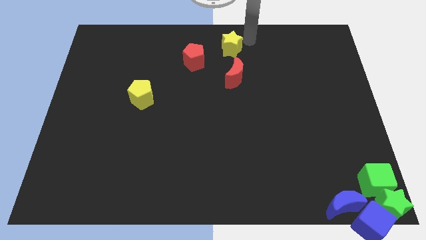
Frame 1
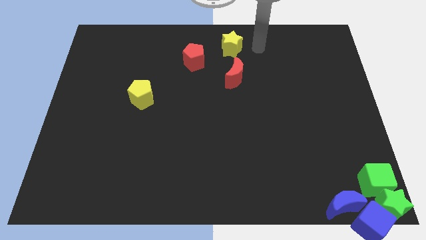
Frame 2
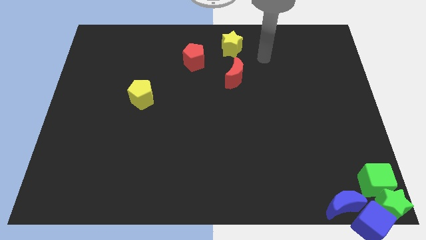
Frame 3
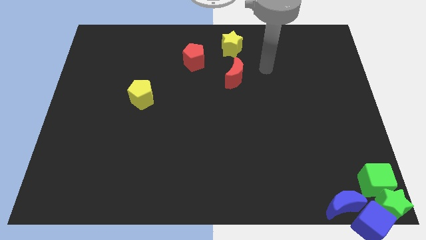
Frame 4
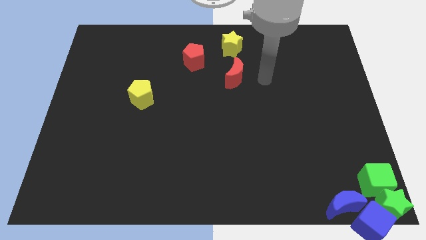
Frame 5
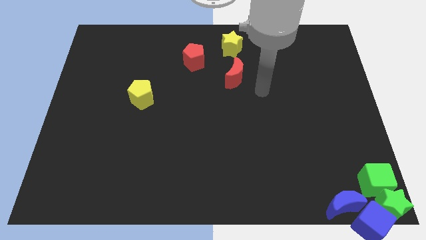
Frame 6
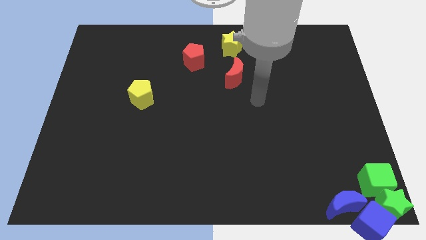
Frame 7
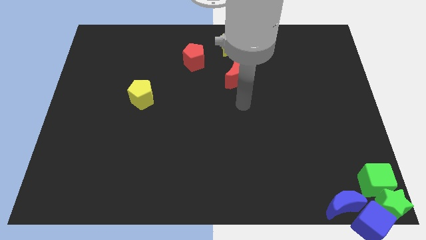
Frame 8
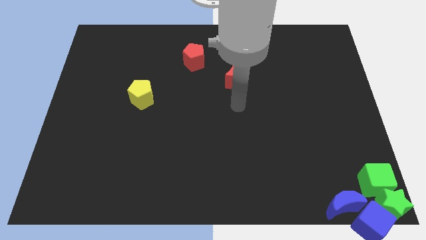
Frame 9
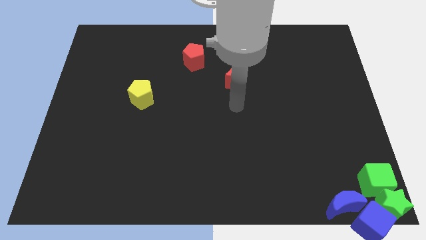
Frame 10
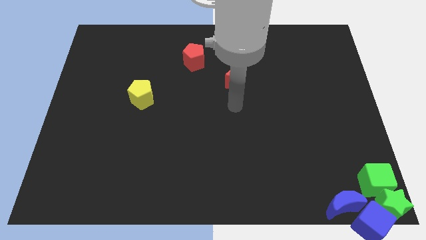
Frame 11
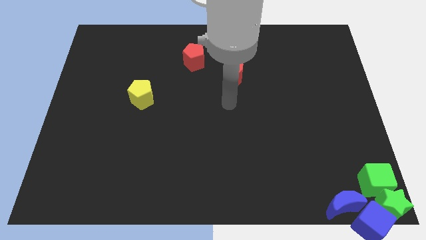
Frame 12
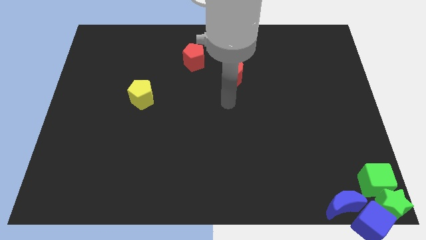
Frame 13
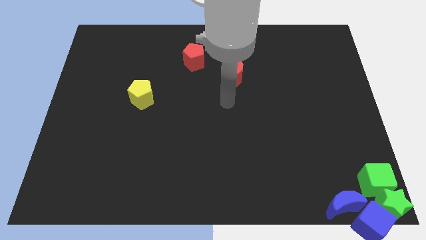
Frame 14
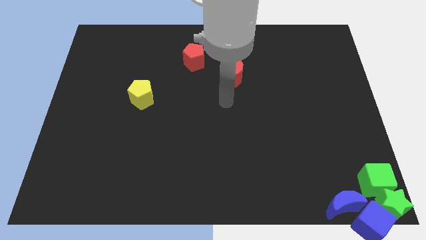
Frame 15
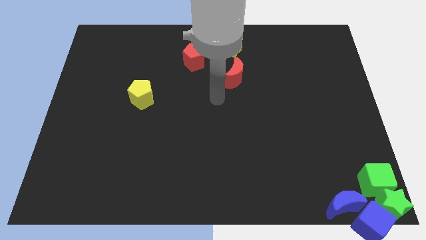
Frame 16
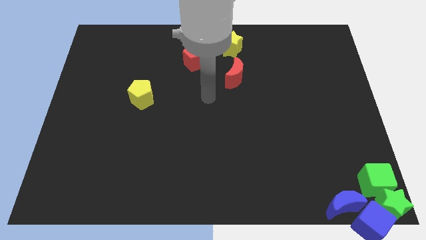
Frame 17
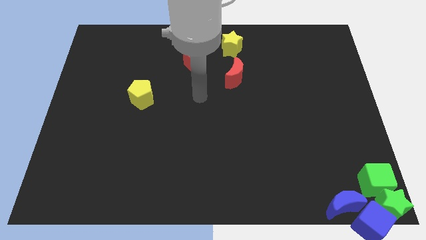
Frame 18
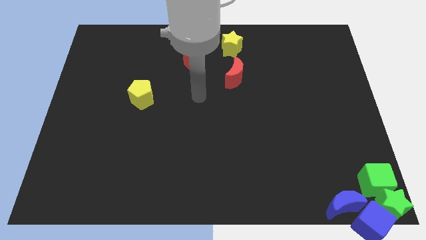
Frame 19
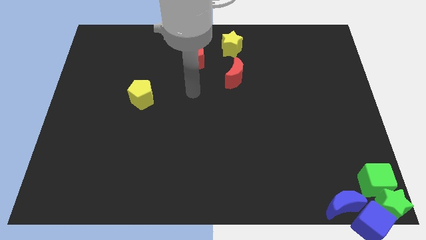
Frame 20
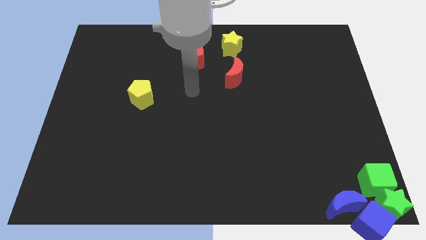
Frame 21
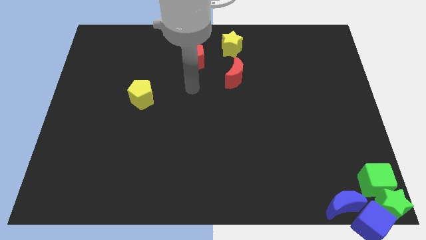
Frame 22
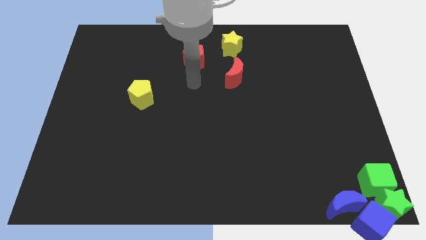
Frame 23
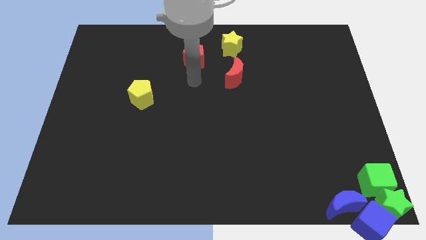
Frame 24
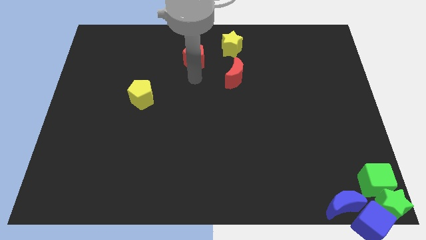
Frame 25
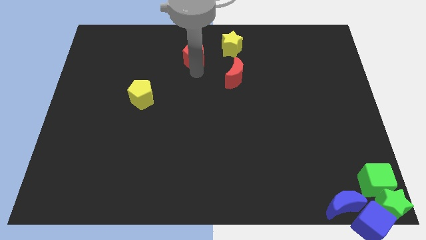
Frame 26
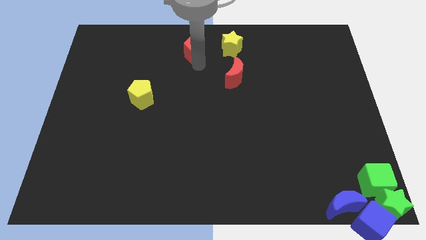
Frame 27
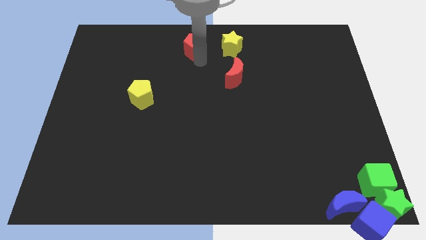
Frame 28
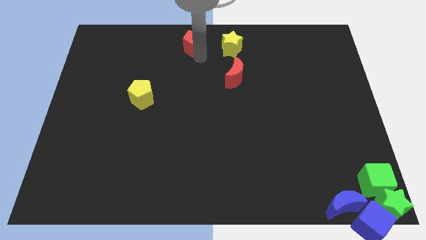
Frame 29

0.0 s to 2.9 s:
move the red pentagon to the left side of the yellow star

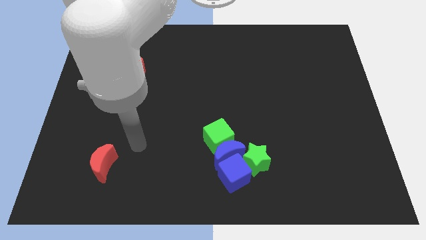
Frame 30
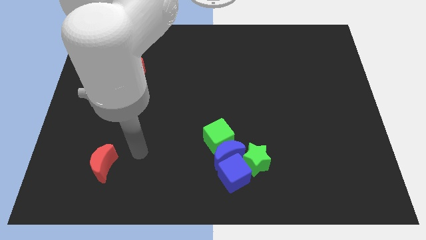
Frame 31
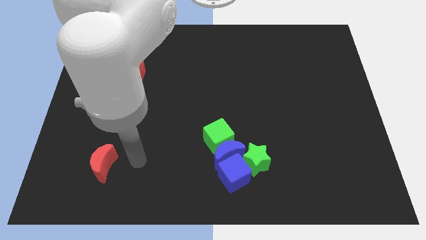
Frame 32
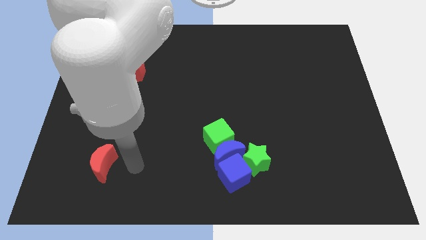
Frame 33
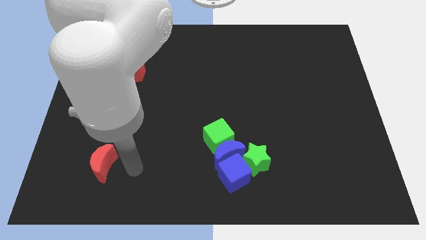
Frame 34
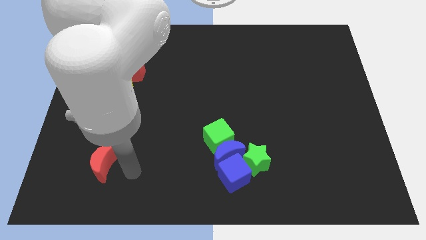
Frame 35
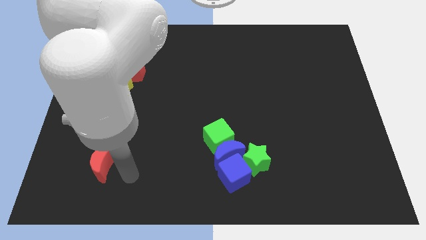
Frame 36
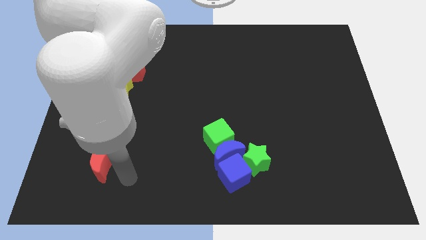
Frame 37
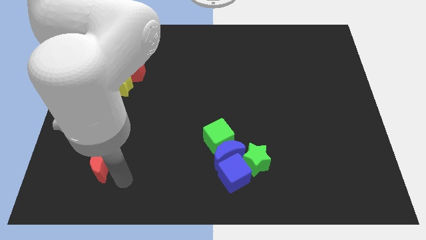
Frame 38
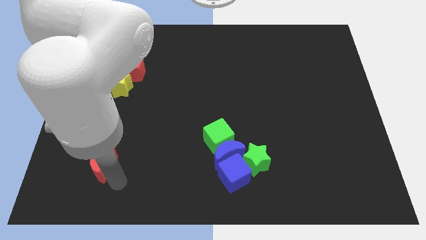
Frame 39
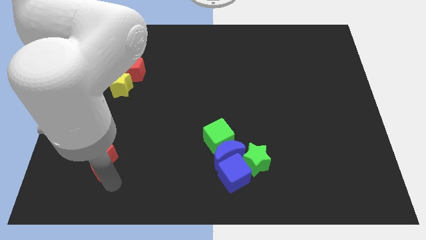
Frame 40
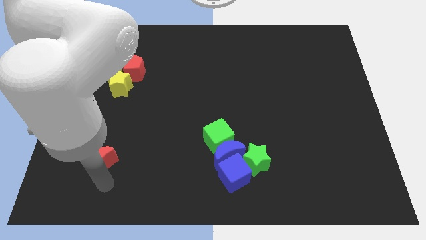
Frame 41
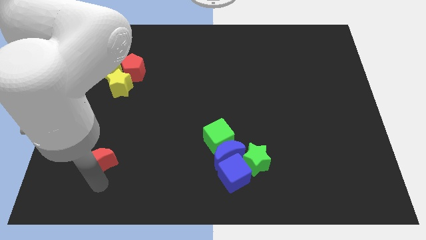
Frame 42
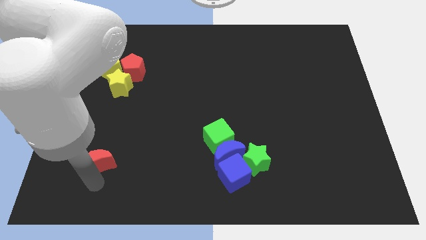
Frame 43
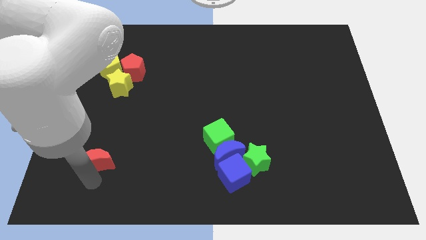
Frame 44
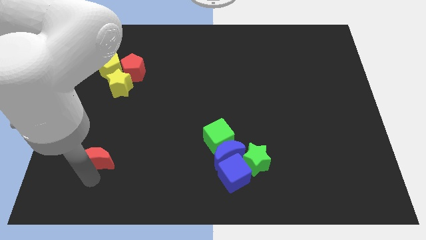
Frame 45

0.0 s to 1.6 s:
slightly move the red crescent upwards

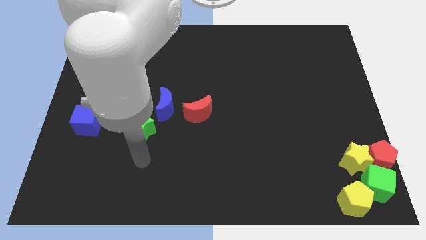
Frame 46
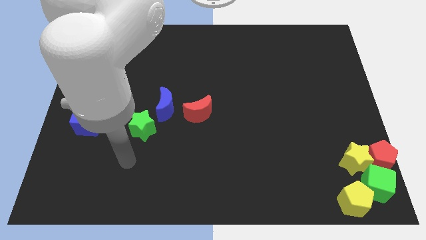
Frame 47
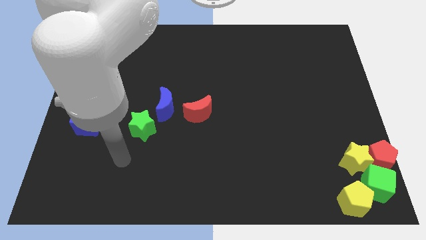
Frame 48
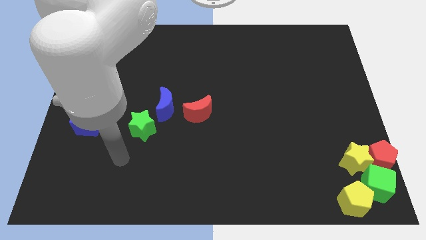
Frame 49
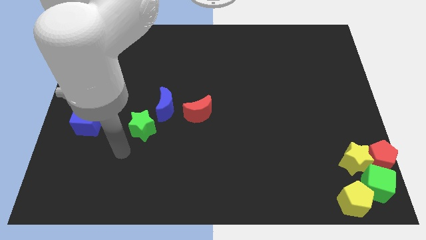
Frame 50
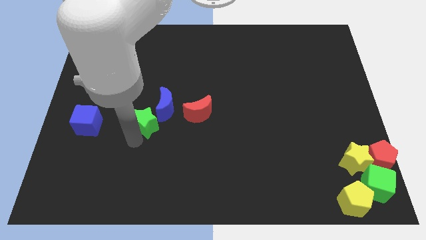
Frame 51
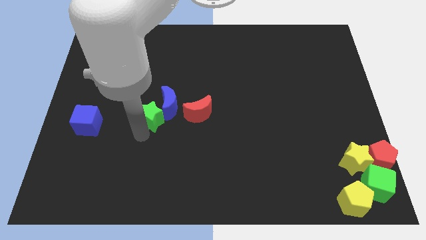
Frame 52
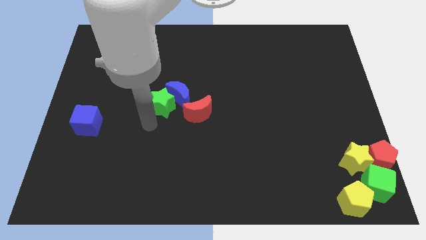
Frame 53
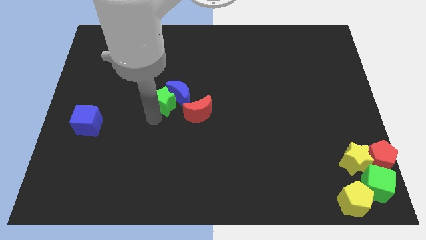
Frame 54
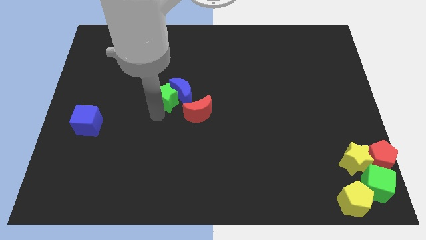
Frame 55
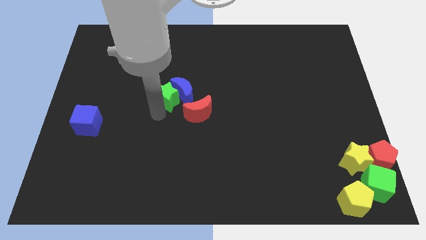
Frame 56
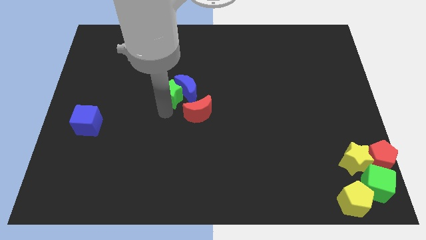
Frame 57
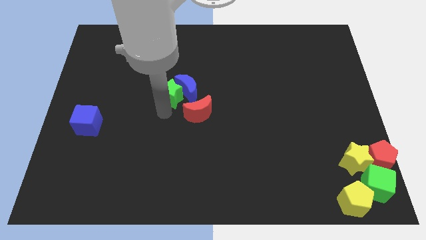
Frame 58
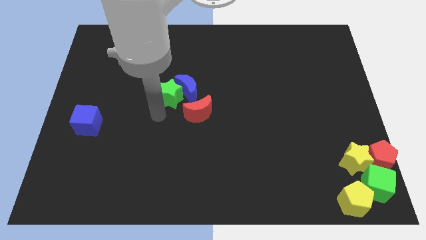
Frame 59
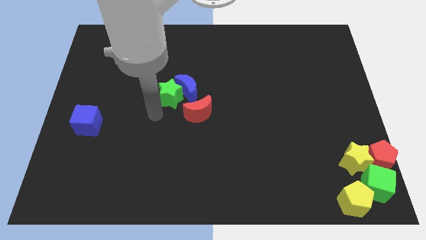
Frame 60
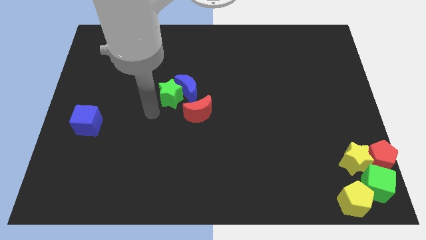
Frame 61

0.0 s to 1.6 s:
push the green star into blue moon

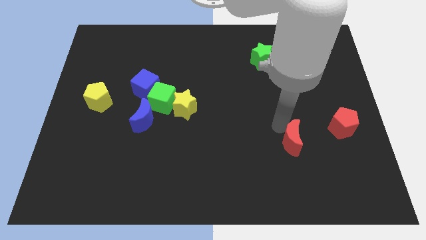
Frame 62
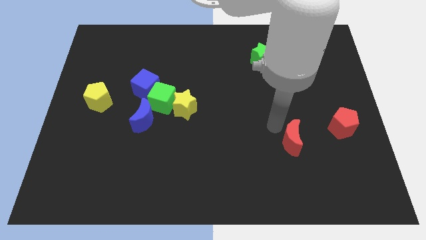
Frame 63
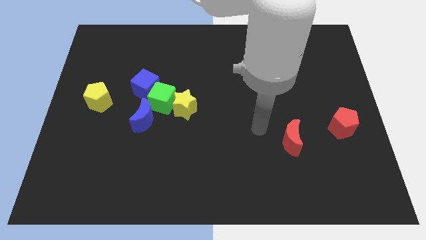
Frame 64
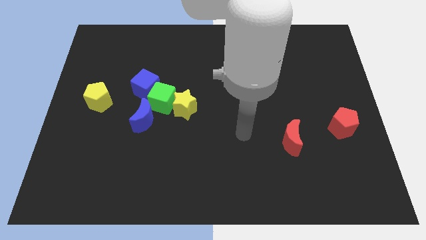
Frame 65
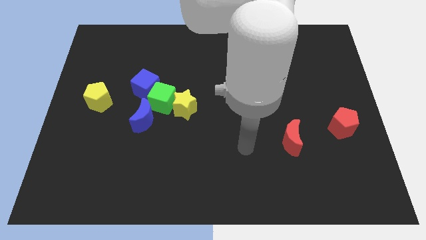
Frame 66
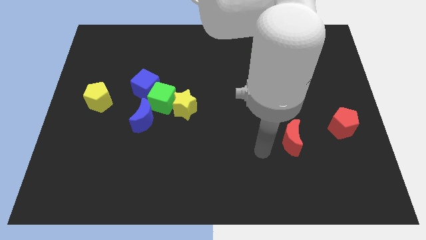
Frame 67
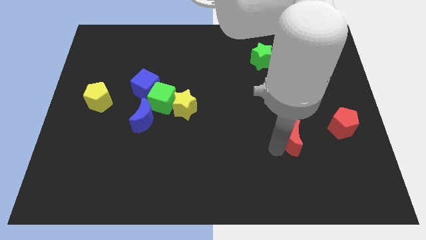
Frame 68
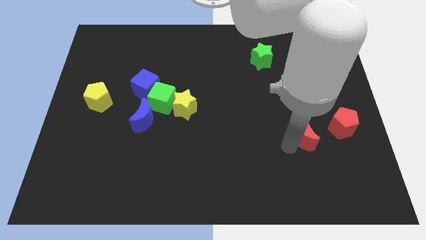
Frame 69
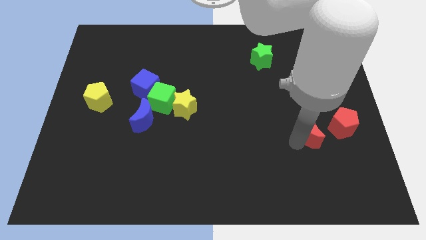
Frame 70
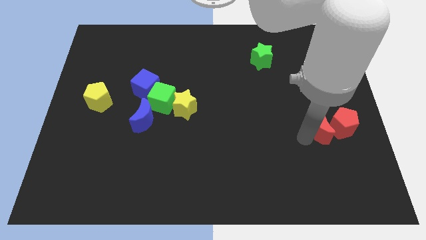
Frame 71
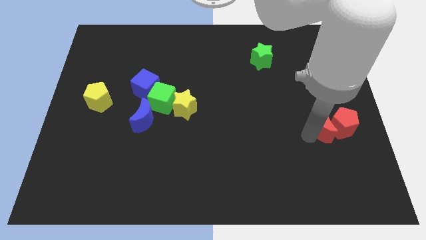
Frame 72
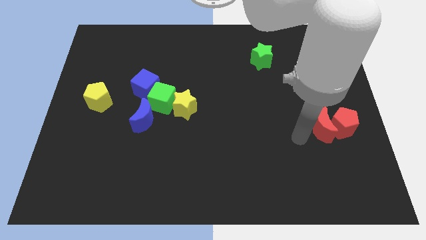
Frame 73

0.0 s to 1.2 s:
place red crescent near red pentagon

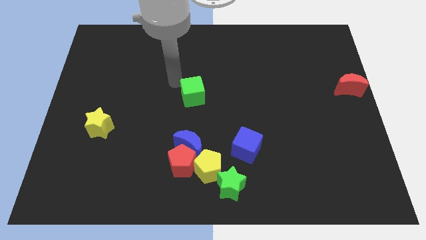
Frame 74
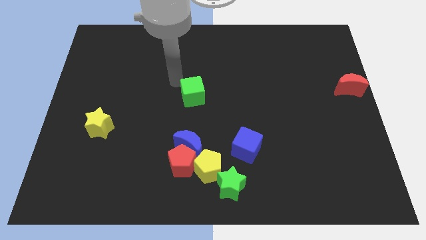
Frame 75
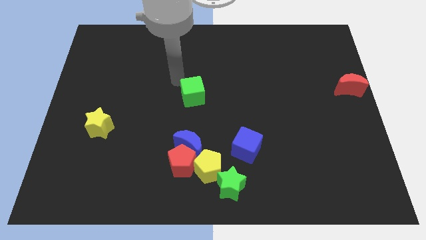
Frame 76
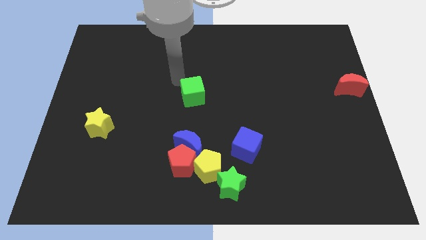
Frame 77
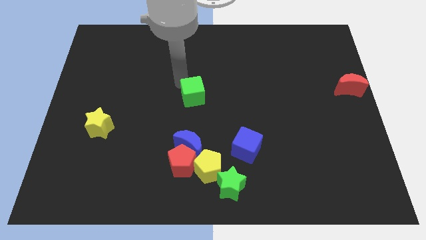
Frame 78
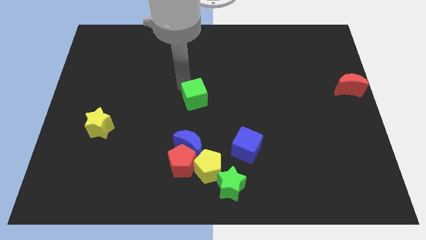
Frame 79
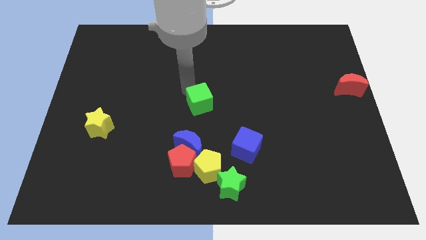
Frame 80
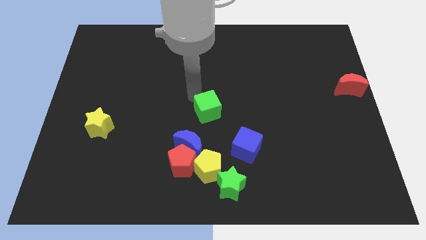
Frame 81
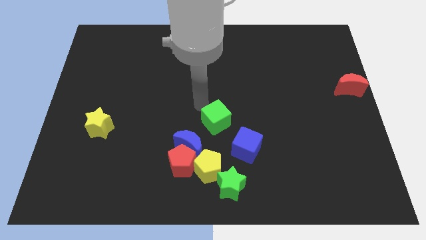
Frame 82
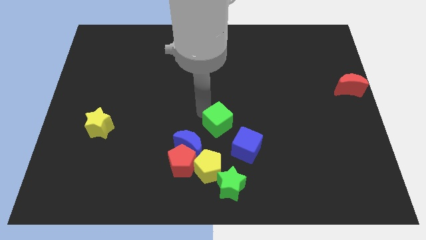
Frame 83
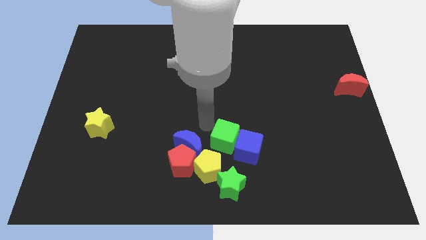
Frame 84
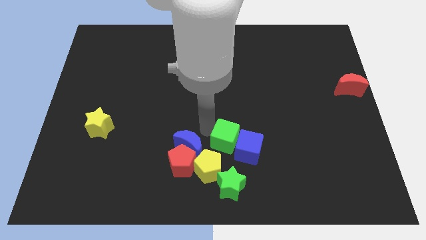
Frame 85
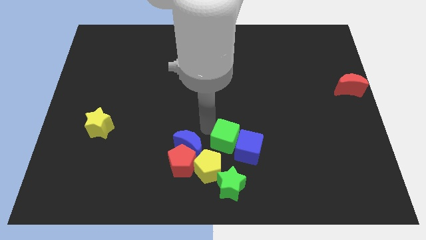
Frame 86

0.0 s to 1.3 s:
push the green cube into the blue block

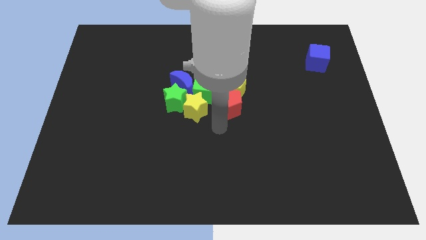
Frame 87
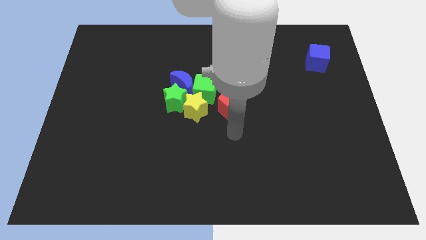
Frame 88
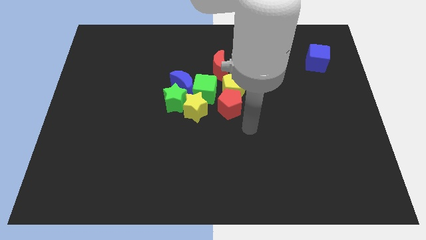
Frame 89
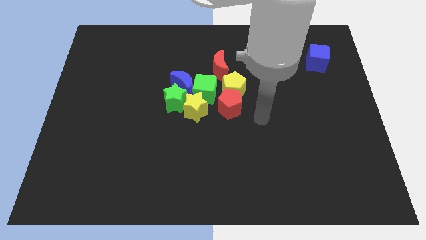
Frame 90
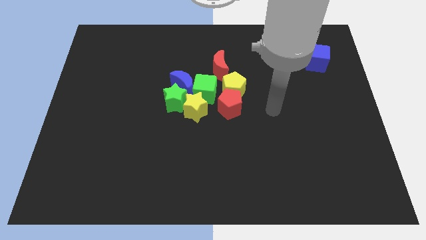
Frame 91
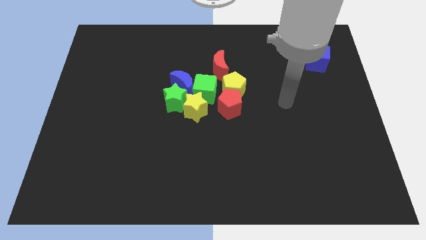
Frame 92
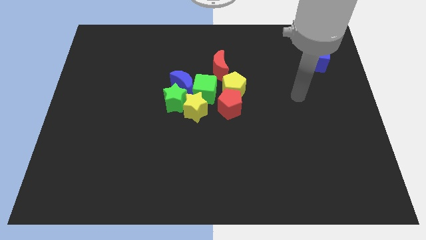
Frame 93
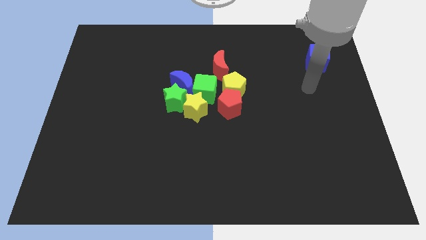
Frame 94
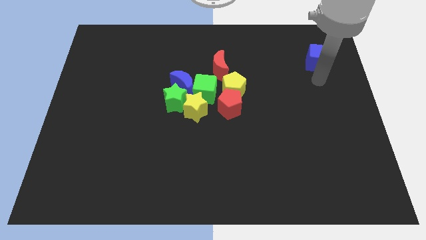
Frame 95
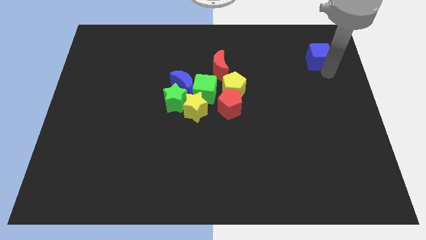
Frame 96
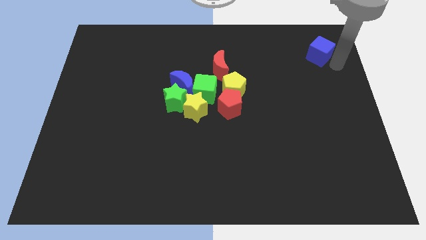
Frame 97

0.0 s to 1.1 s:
go and tap the blue cube
